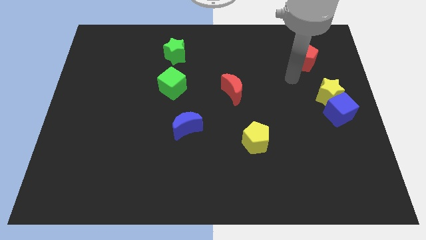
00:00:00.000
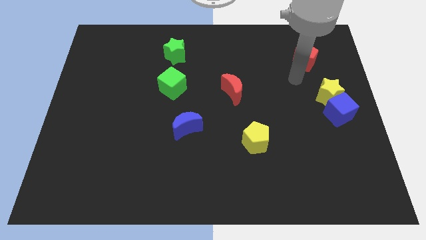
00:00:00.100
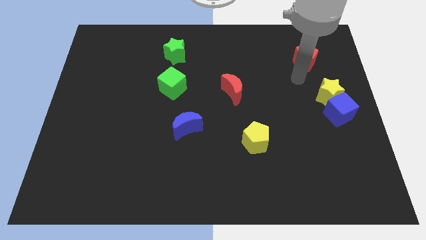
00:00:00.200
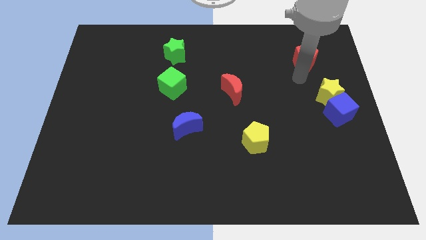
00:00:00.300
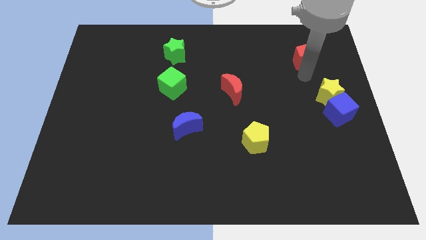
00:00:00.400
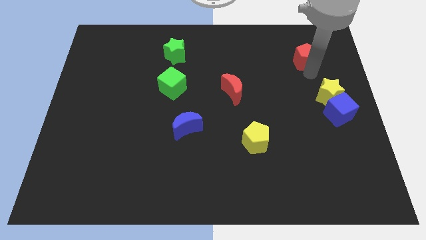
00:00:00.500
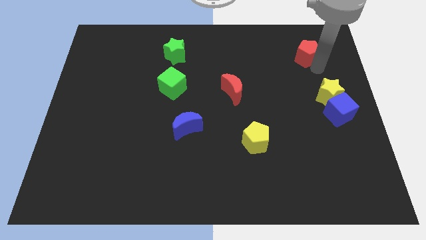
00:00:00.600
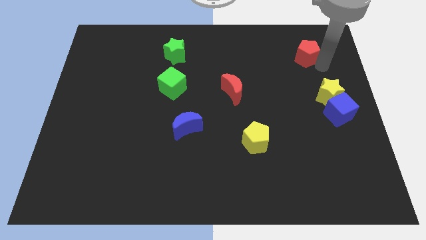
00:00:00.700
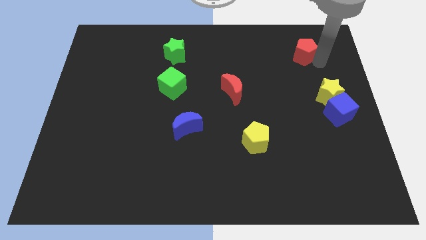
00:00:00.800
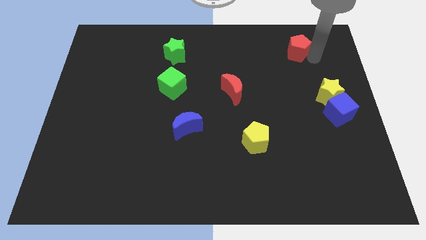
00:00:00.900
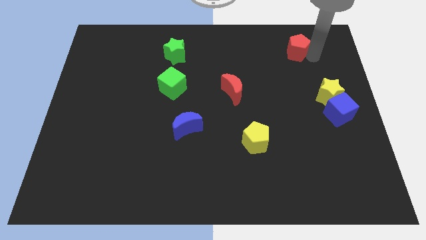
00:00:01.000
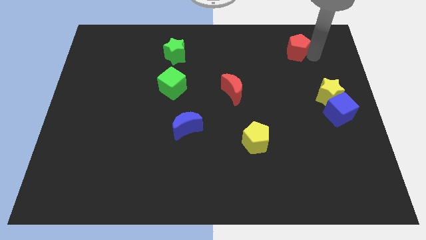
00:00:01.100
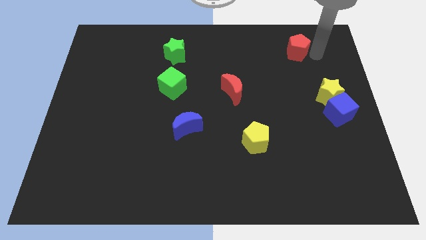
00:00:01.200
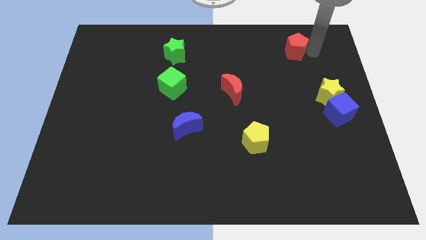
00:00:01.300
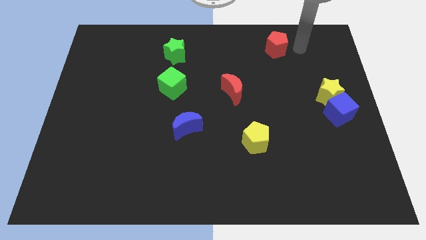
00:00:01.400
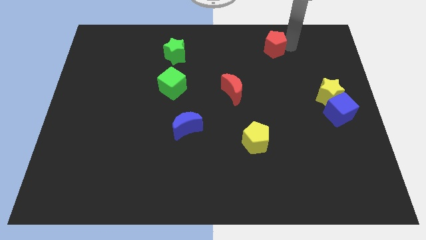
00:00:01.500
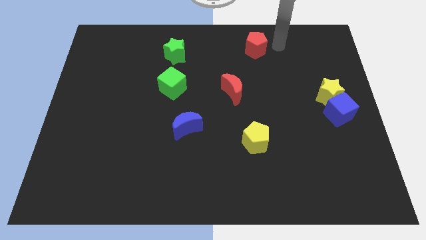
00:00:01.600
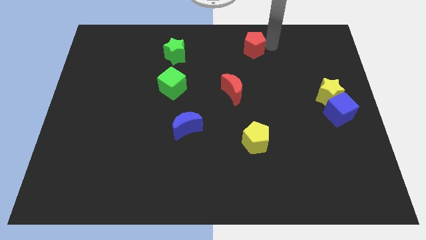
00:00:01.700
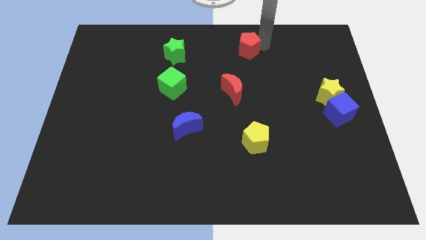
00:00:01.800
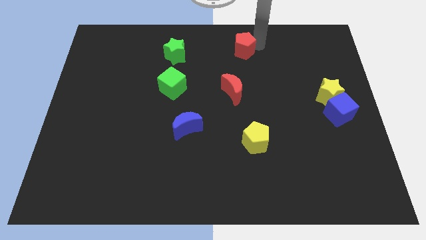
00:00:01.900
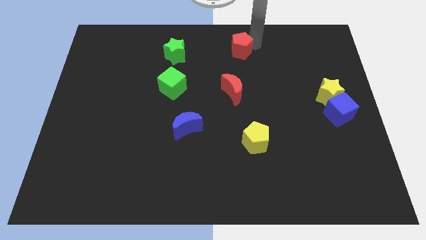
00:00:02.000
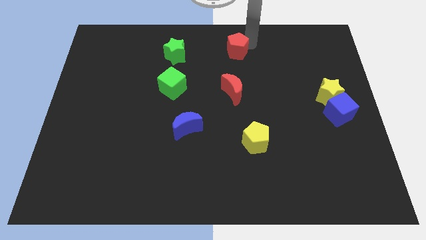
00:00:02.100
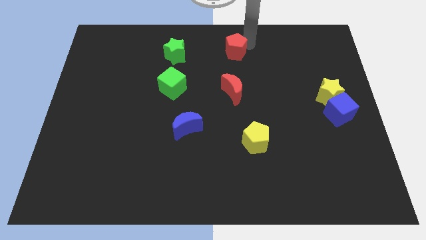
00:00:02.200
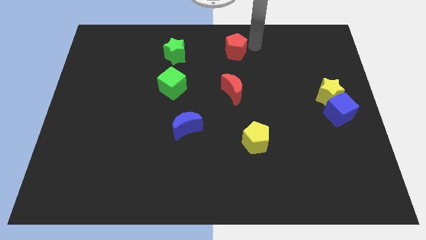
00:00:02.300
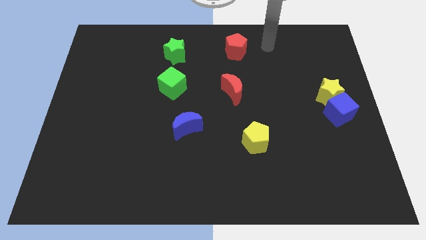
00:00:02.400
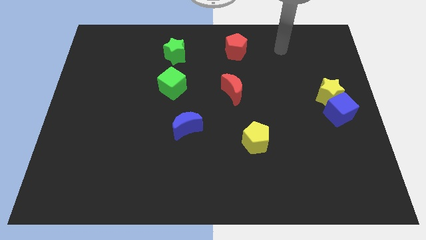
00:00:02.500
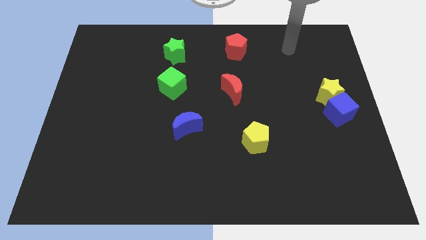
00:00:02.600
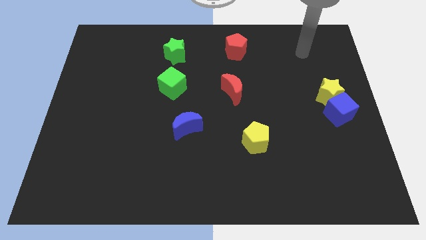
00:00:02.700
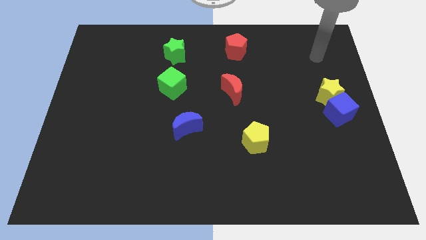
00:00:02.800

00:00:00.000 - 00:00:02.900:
place the red pentagon above the red moon

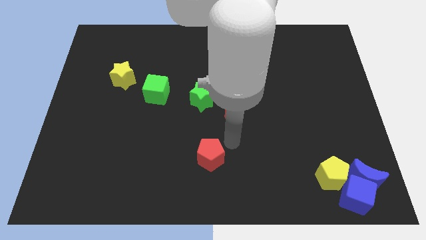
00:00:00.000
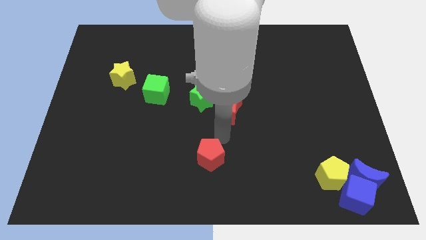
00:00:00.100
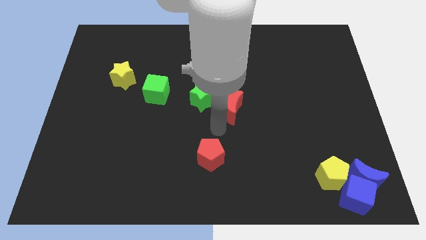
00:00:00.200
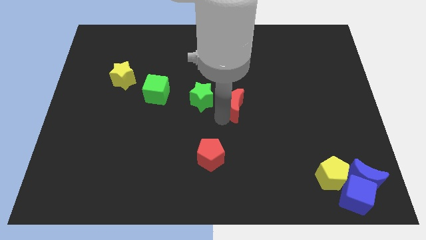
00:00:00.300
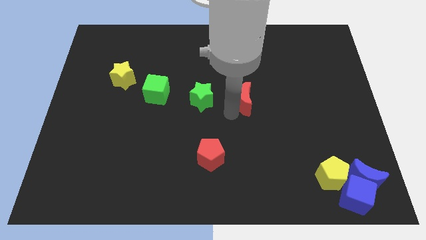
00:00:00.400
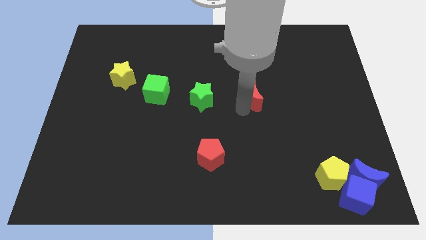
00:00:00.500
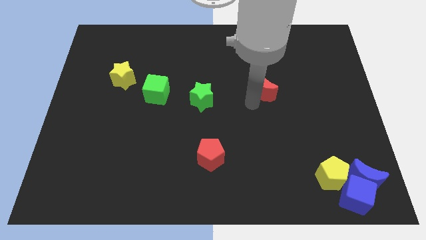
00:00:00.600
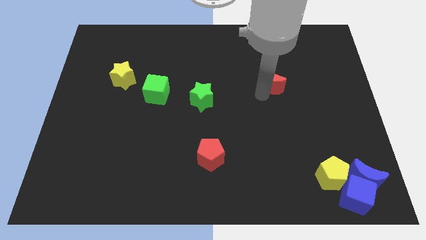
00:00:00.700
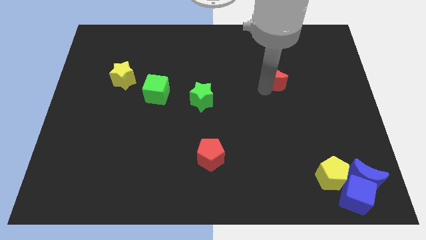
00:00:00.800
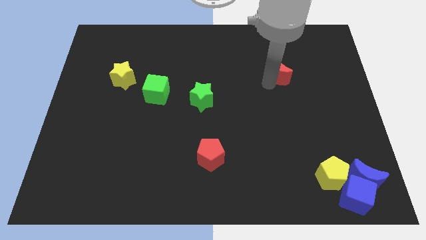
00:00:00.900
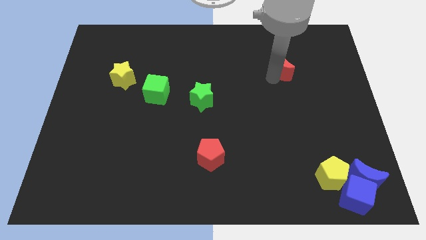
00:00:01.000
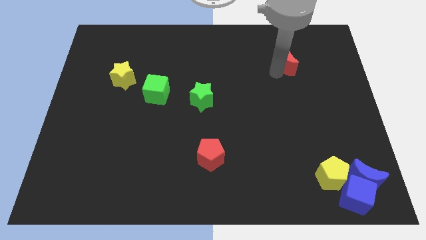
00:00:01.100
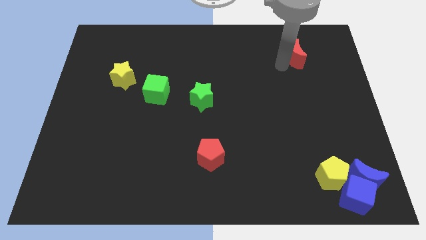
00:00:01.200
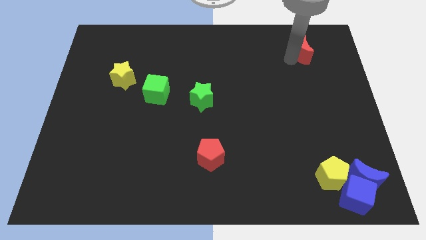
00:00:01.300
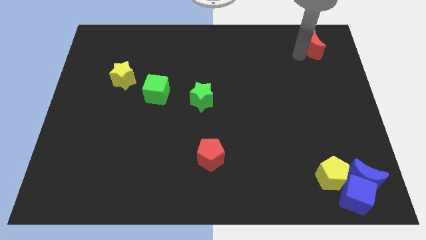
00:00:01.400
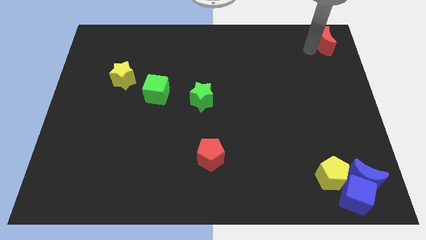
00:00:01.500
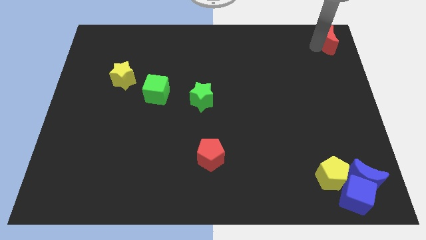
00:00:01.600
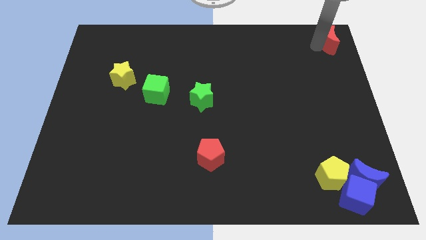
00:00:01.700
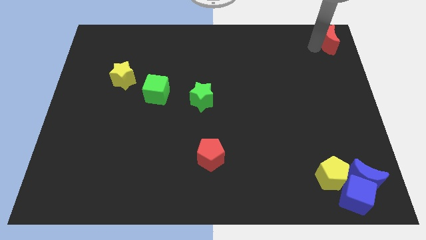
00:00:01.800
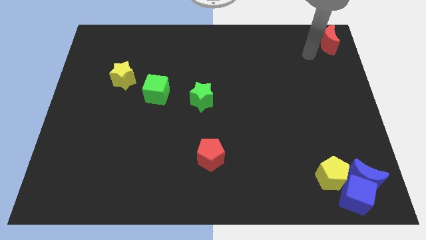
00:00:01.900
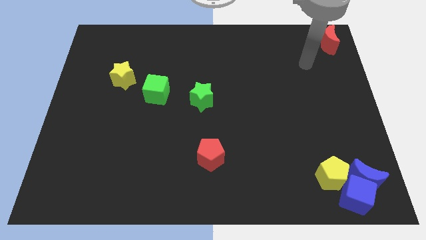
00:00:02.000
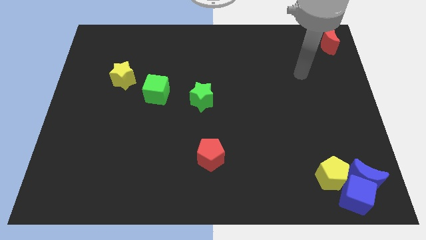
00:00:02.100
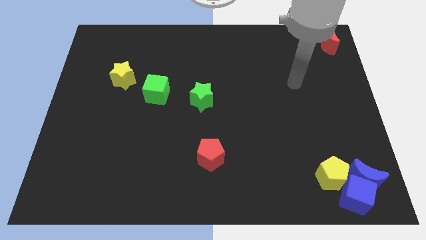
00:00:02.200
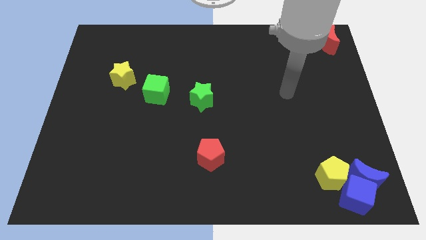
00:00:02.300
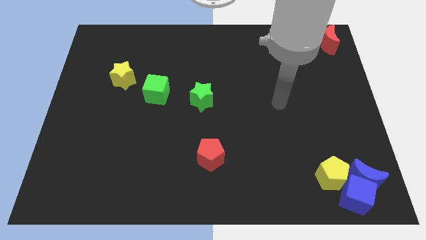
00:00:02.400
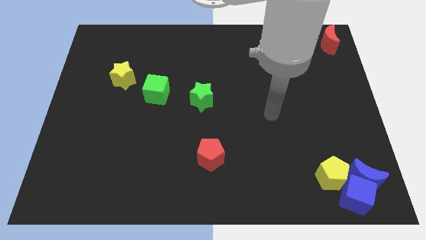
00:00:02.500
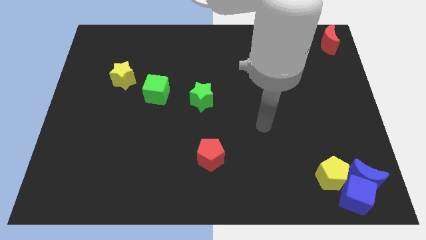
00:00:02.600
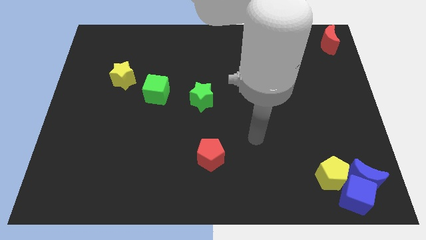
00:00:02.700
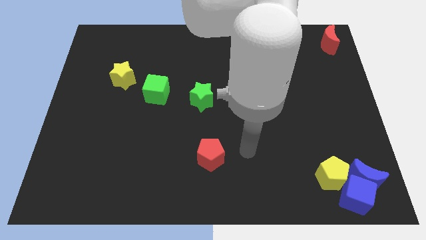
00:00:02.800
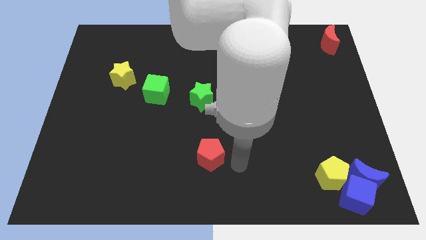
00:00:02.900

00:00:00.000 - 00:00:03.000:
separate red moon from green star

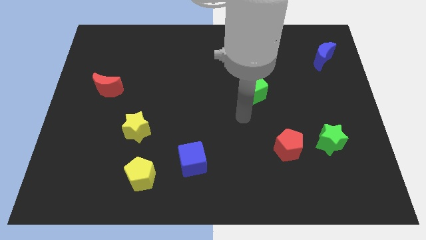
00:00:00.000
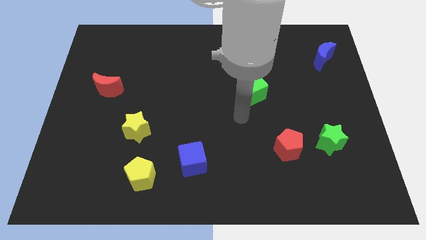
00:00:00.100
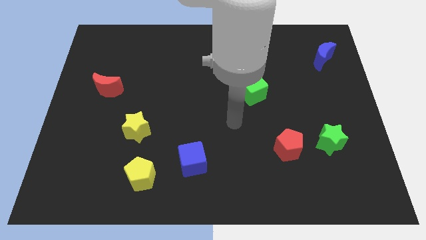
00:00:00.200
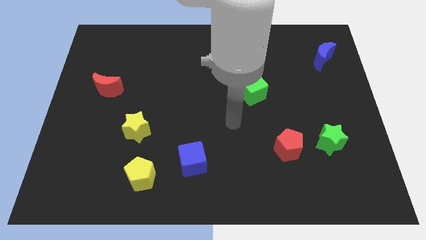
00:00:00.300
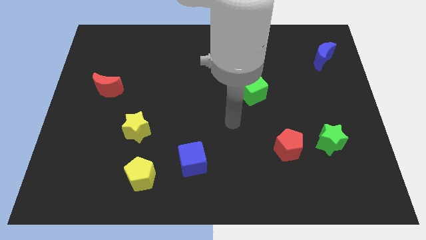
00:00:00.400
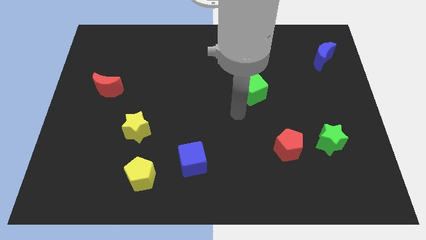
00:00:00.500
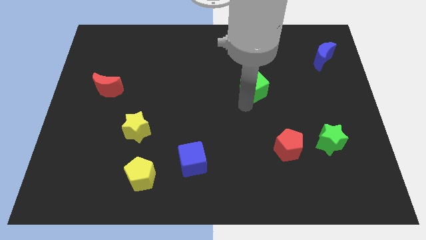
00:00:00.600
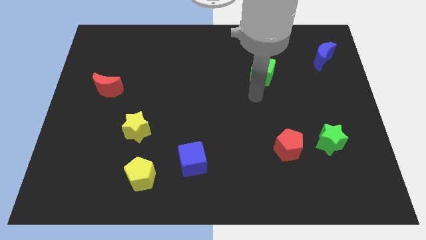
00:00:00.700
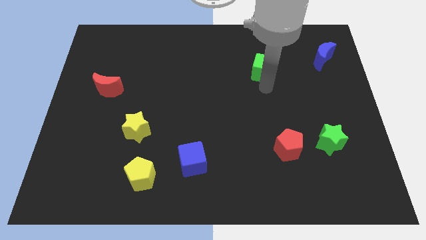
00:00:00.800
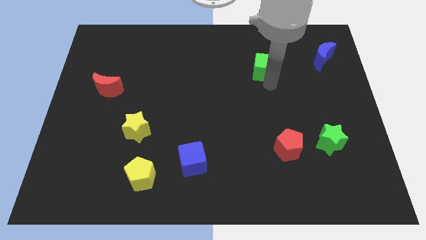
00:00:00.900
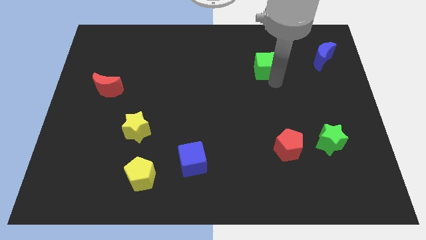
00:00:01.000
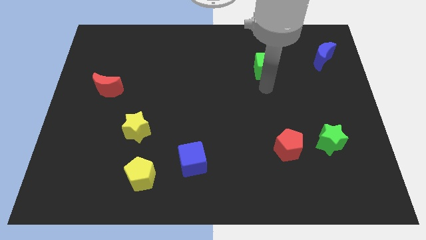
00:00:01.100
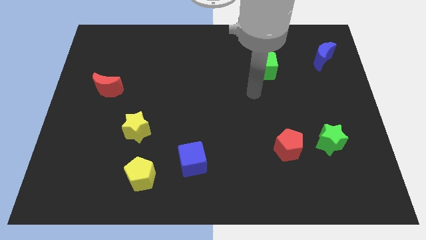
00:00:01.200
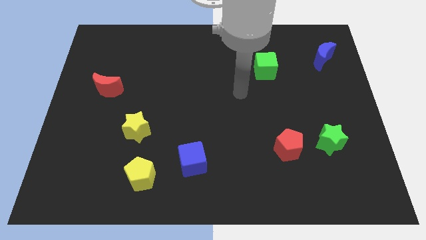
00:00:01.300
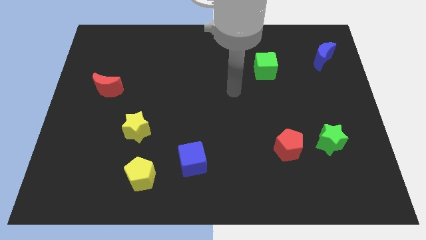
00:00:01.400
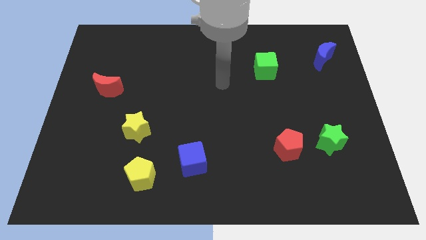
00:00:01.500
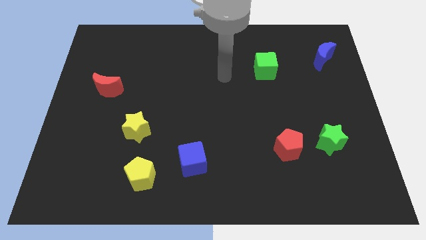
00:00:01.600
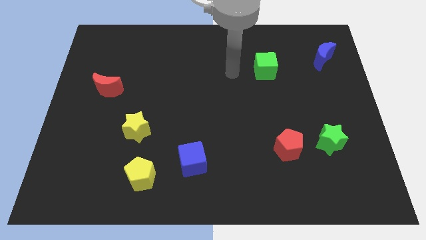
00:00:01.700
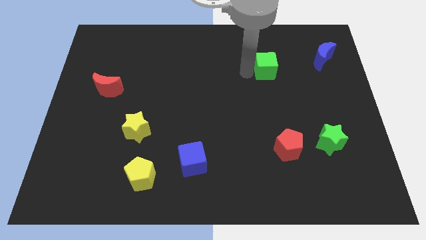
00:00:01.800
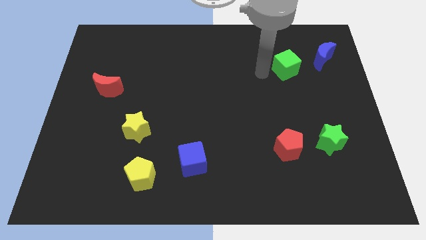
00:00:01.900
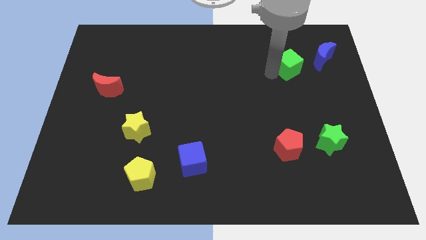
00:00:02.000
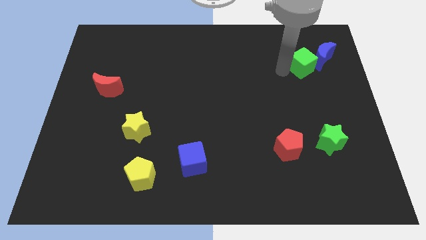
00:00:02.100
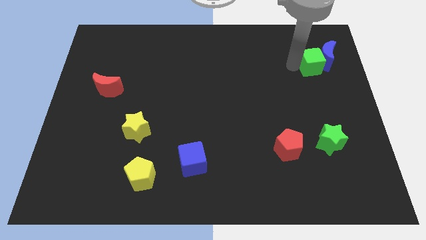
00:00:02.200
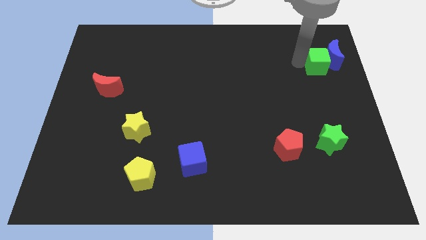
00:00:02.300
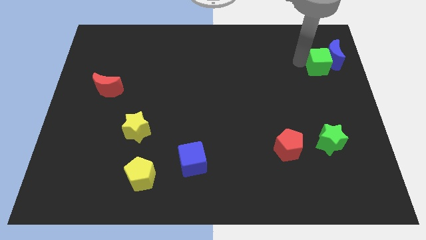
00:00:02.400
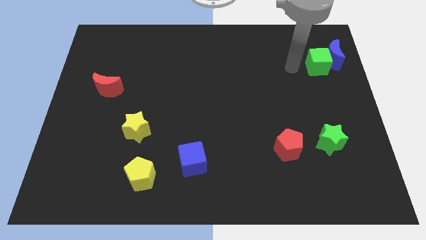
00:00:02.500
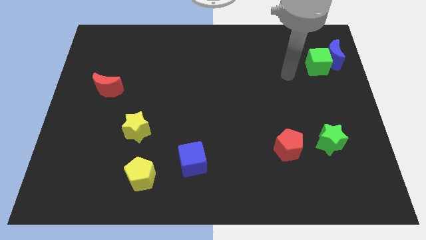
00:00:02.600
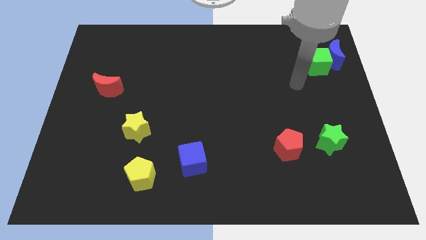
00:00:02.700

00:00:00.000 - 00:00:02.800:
move the green cube into the blue moon to the left

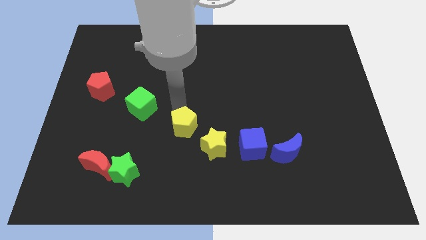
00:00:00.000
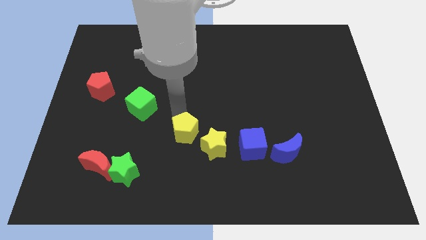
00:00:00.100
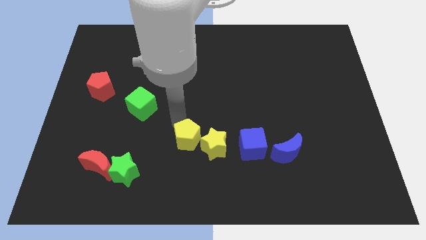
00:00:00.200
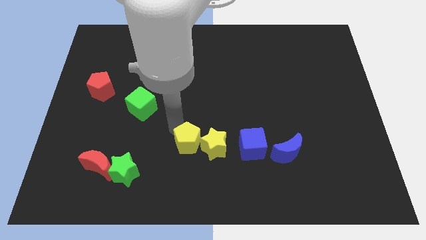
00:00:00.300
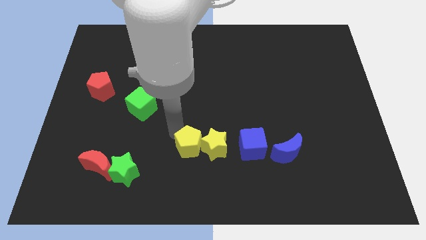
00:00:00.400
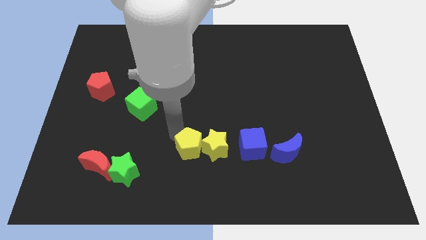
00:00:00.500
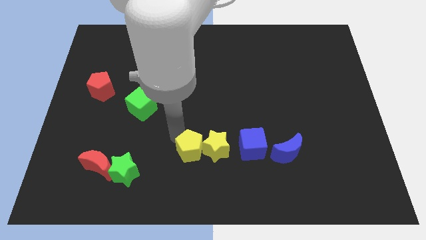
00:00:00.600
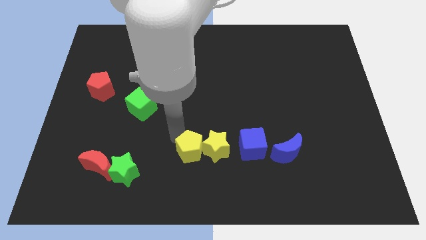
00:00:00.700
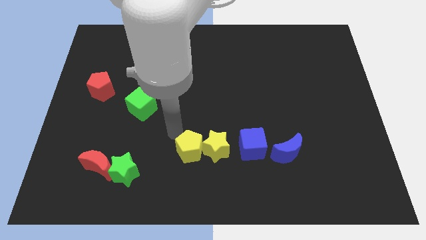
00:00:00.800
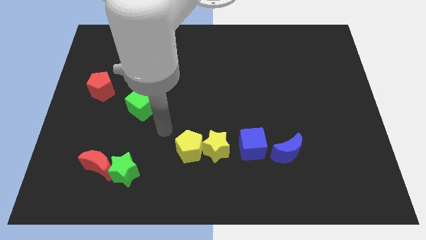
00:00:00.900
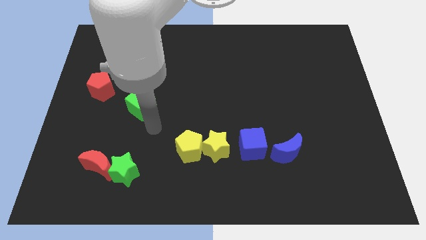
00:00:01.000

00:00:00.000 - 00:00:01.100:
move the yellow pentagon into the yellow star
